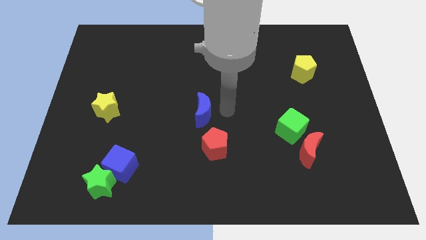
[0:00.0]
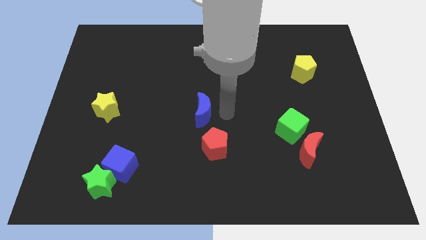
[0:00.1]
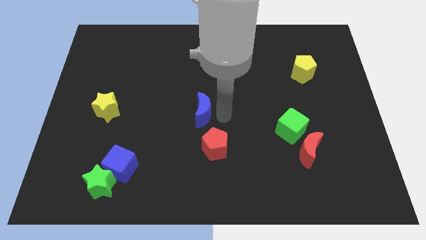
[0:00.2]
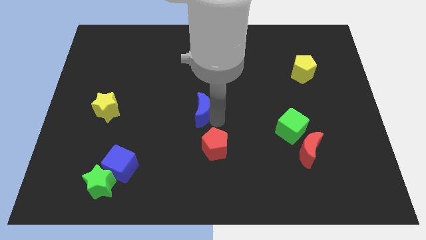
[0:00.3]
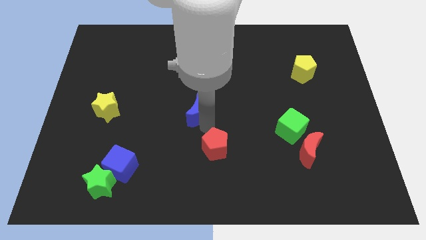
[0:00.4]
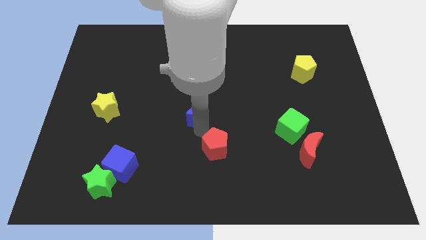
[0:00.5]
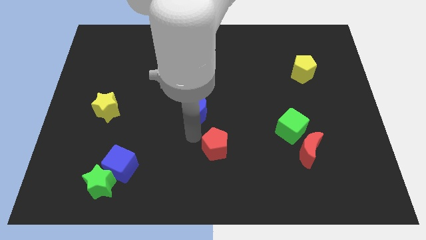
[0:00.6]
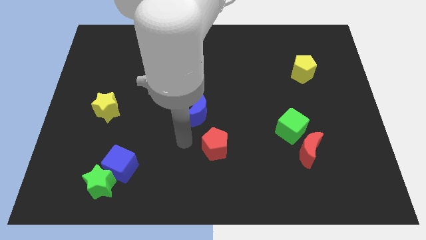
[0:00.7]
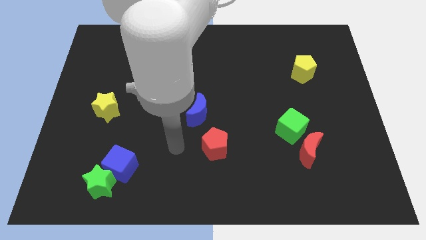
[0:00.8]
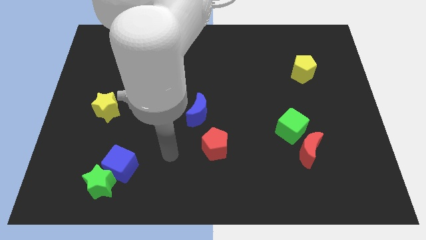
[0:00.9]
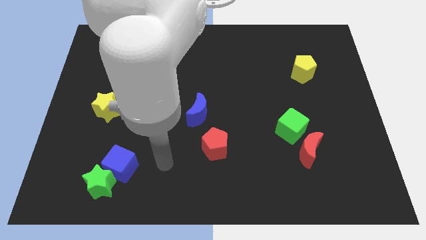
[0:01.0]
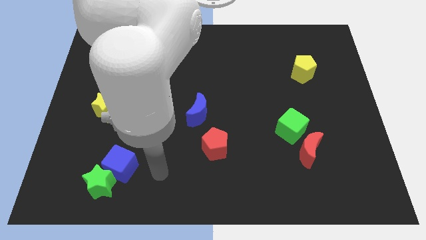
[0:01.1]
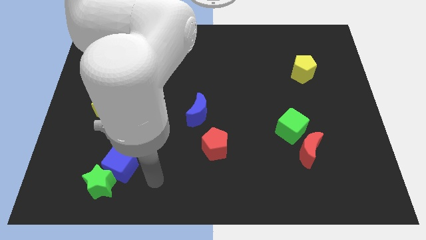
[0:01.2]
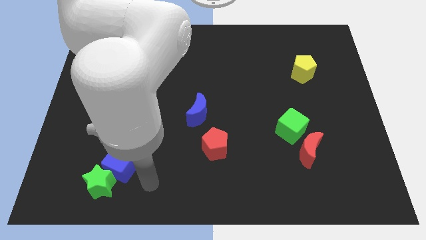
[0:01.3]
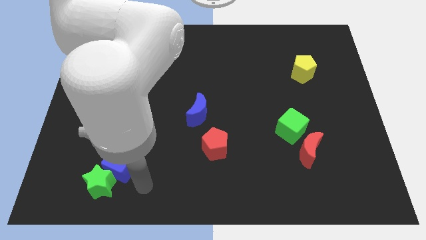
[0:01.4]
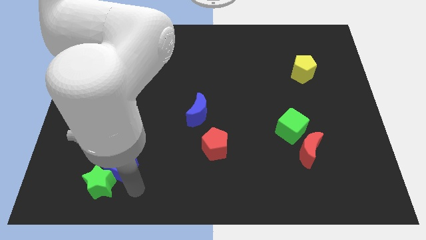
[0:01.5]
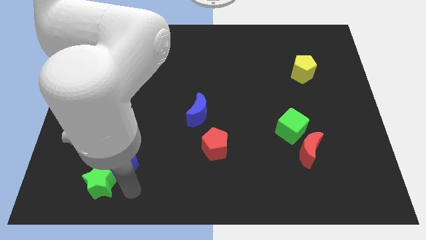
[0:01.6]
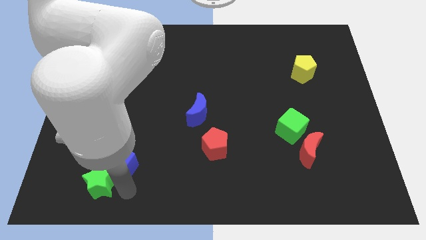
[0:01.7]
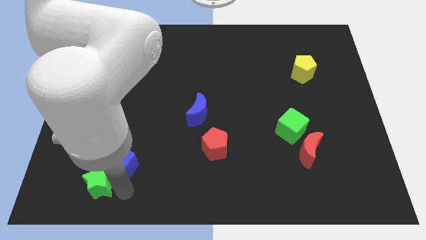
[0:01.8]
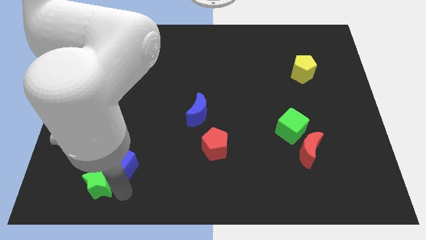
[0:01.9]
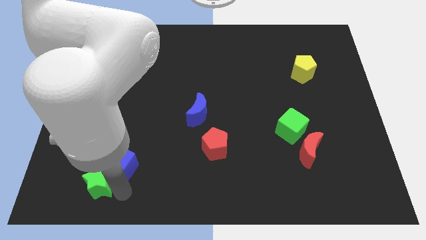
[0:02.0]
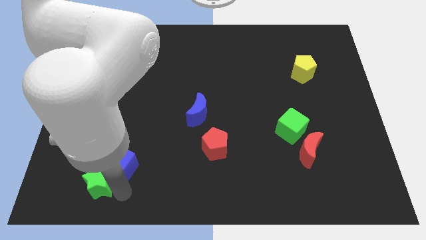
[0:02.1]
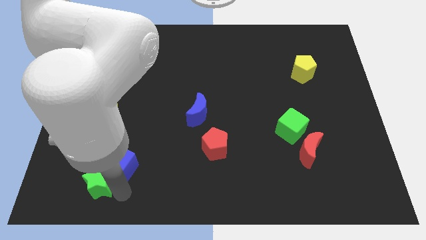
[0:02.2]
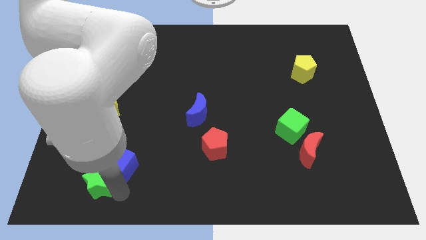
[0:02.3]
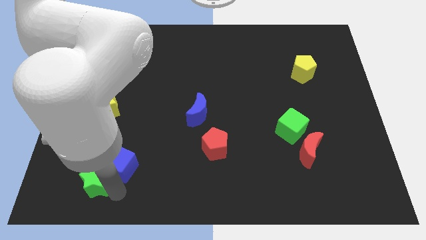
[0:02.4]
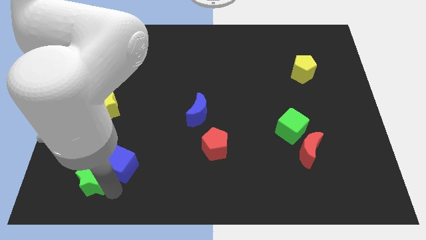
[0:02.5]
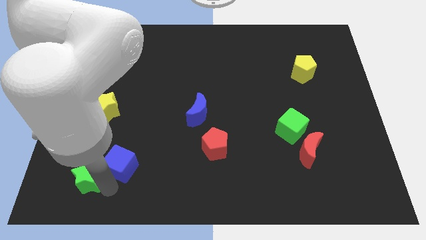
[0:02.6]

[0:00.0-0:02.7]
move the arm to the green star

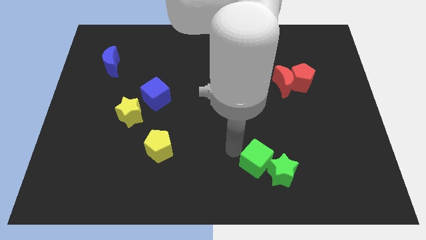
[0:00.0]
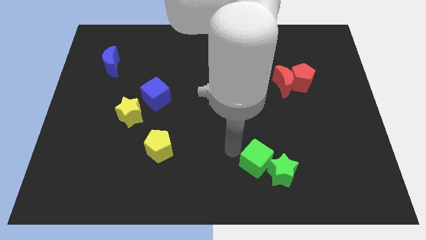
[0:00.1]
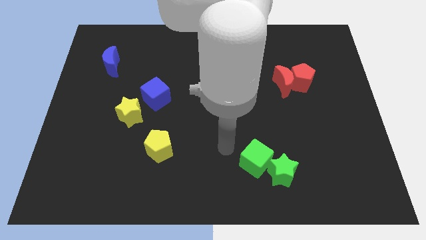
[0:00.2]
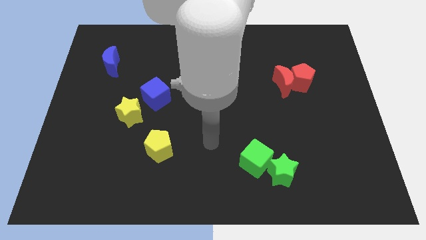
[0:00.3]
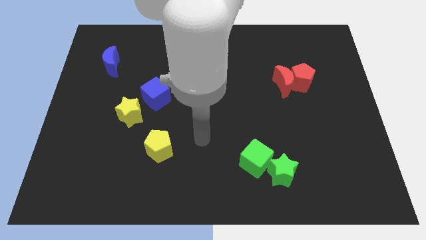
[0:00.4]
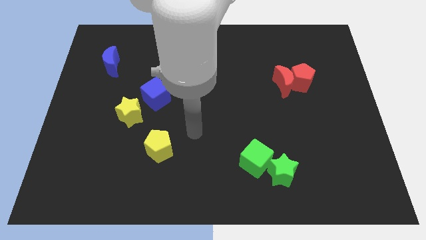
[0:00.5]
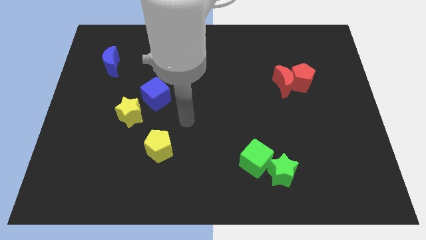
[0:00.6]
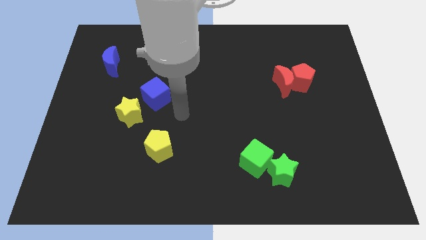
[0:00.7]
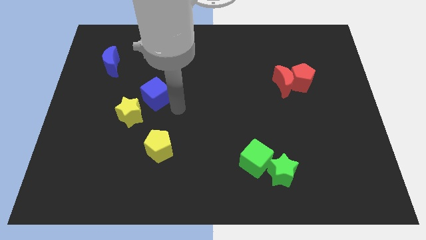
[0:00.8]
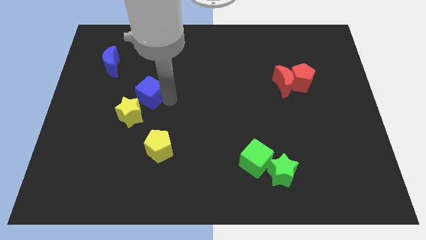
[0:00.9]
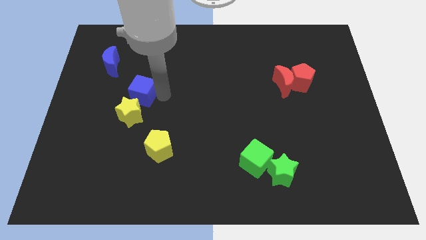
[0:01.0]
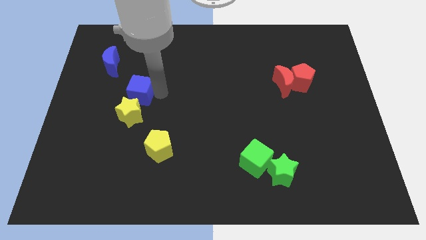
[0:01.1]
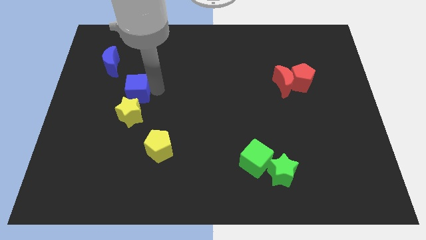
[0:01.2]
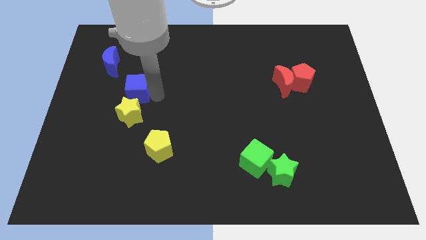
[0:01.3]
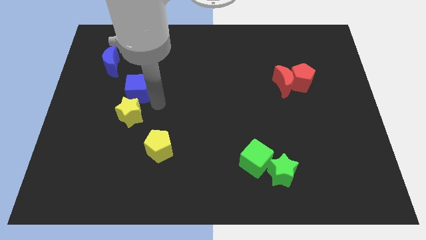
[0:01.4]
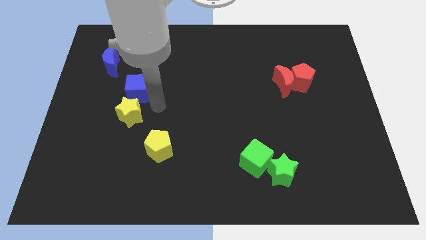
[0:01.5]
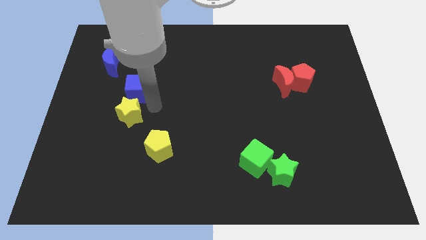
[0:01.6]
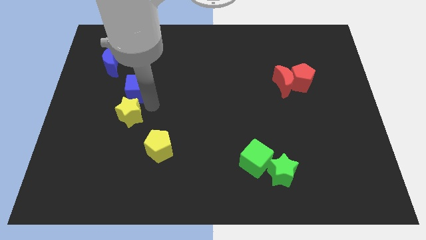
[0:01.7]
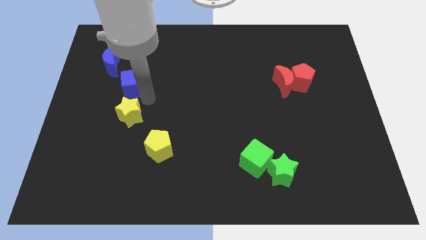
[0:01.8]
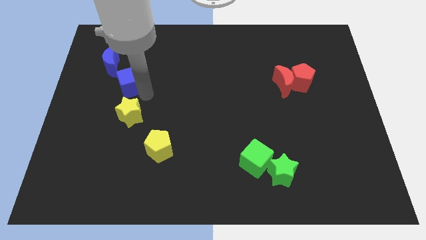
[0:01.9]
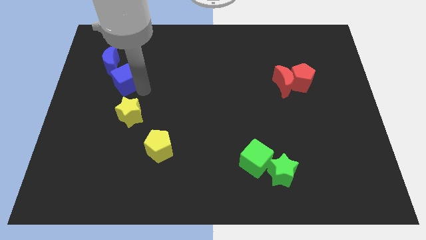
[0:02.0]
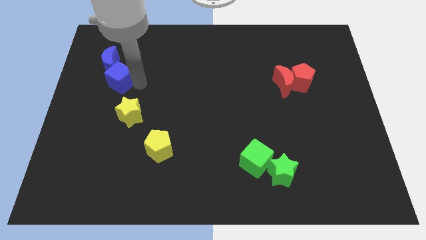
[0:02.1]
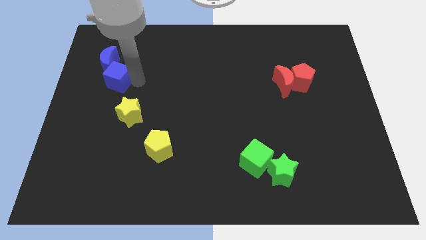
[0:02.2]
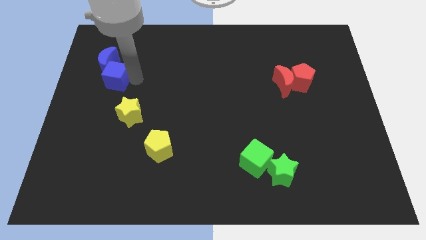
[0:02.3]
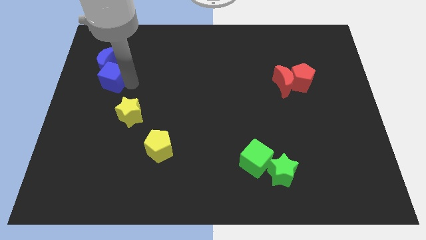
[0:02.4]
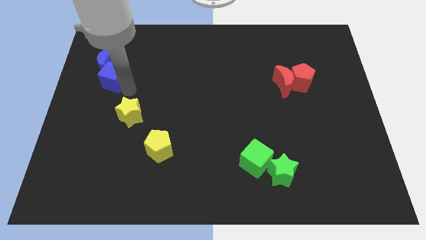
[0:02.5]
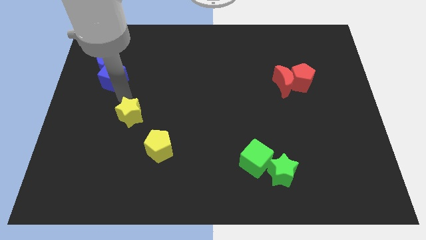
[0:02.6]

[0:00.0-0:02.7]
push the blue cube into the blue crescent

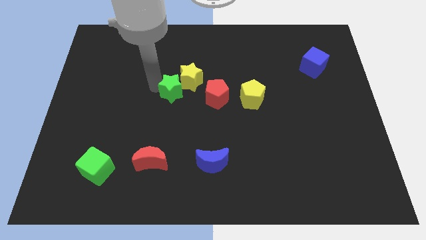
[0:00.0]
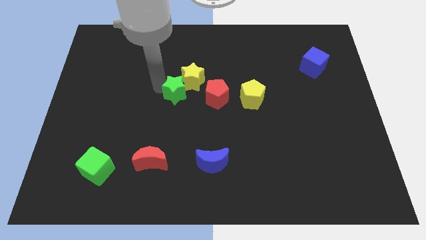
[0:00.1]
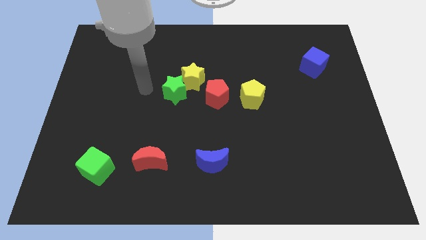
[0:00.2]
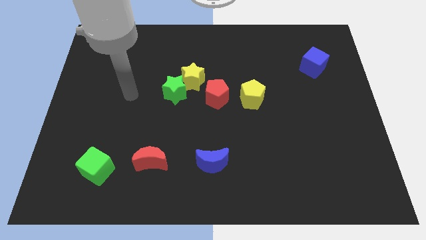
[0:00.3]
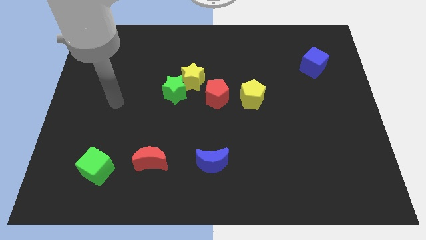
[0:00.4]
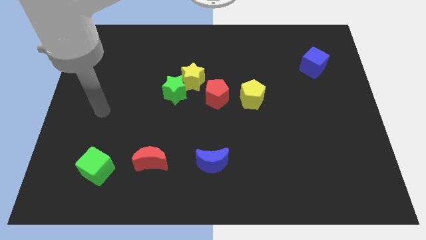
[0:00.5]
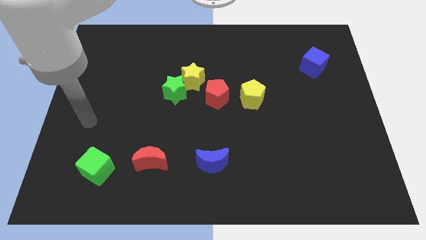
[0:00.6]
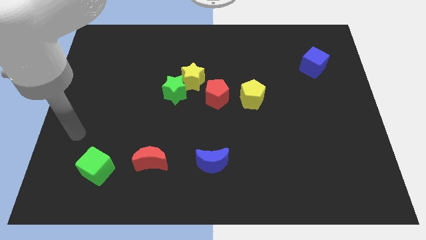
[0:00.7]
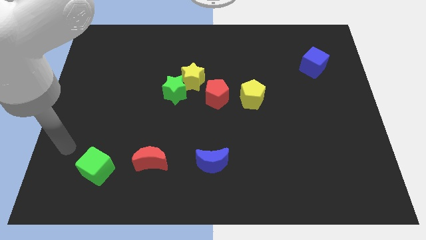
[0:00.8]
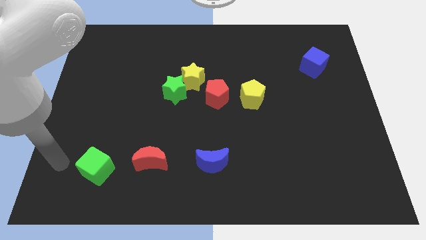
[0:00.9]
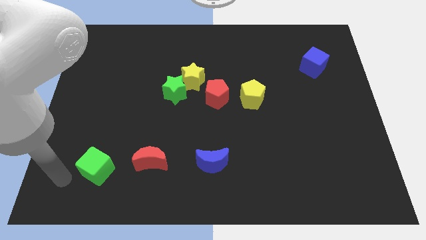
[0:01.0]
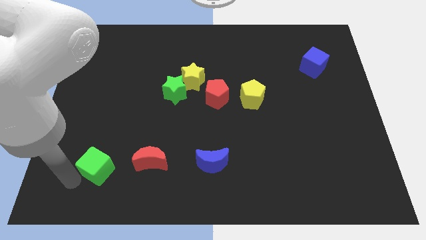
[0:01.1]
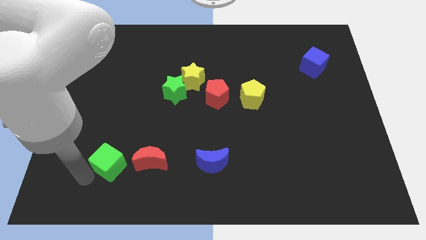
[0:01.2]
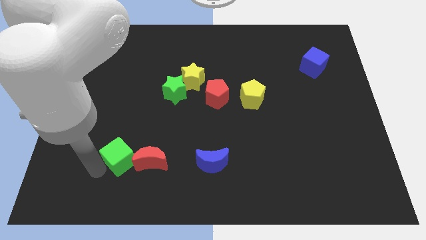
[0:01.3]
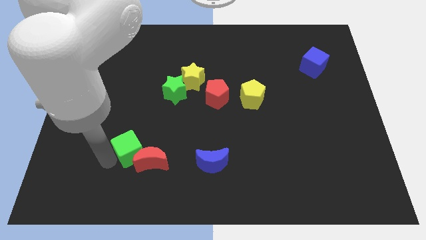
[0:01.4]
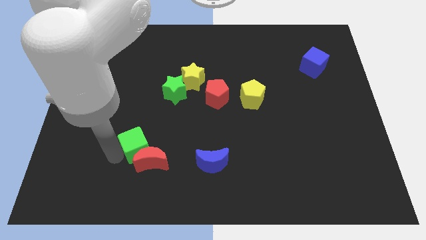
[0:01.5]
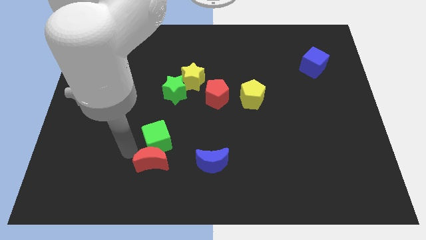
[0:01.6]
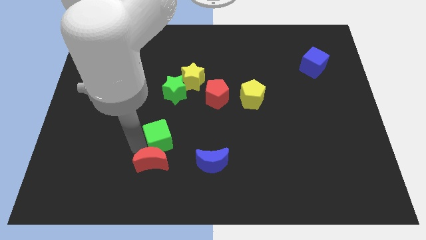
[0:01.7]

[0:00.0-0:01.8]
place the green cube above the red crescent

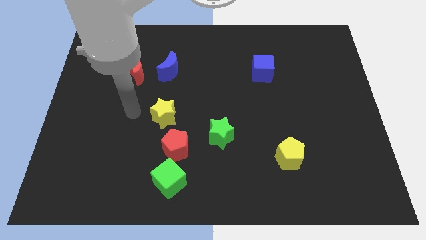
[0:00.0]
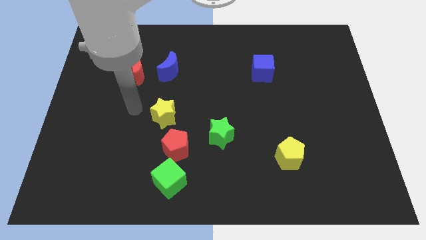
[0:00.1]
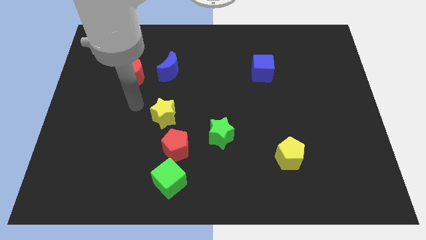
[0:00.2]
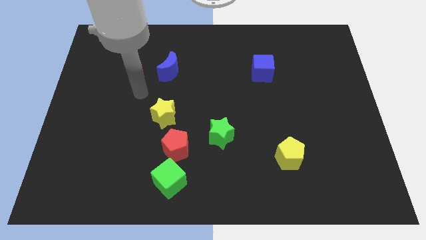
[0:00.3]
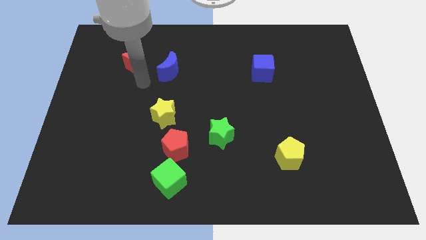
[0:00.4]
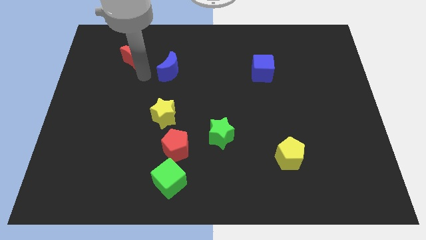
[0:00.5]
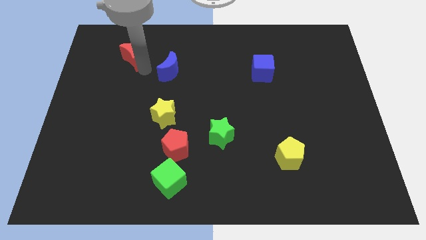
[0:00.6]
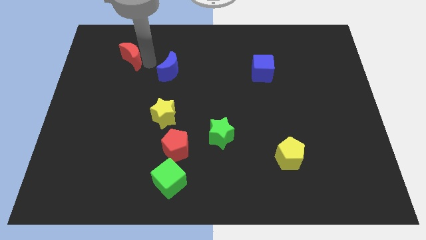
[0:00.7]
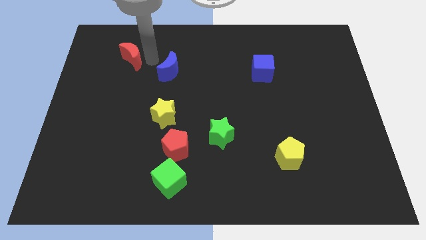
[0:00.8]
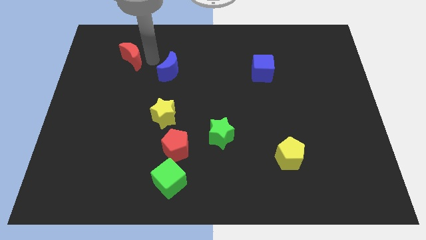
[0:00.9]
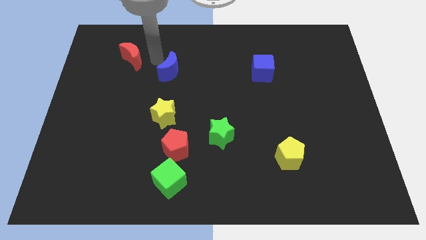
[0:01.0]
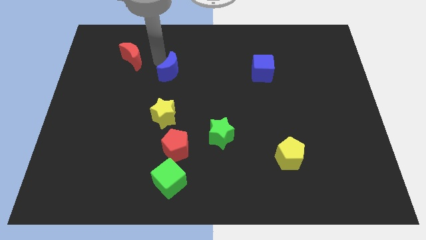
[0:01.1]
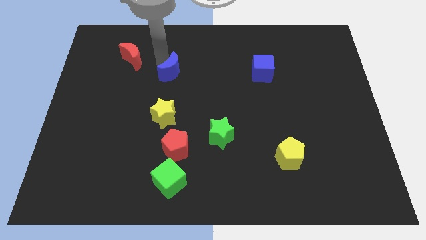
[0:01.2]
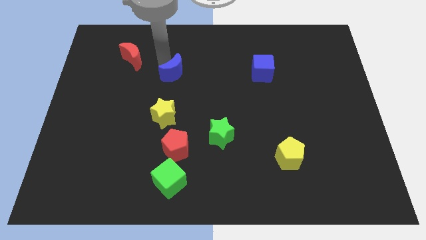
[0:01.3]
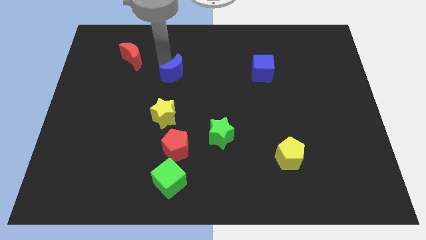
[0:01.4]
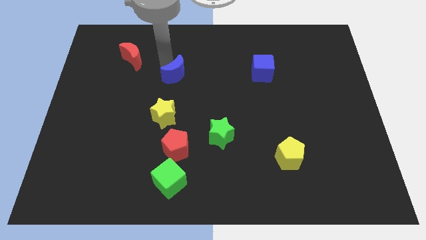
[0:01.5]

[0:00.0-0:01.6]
slide red moon and the blue moon away from each other

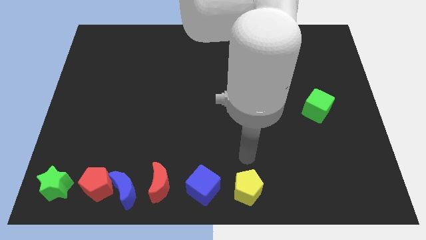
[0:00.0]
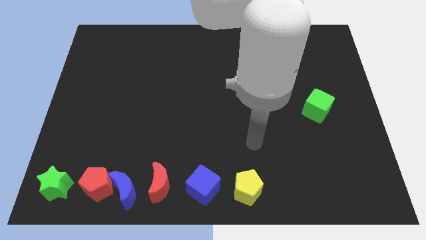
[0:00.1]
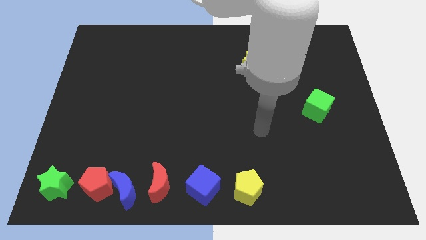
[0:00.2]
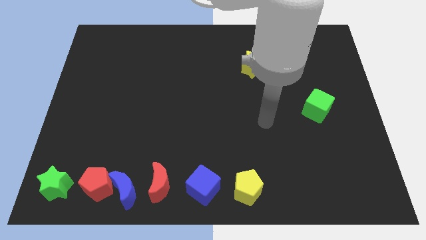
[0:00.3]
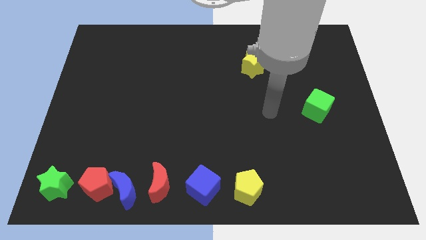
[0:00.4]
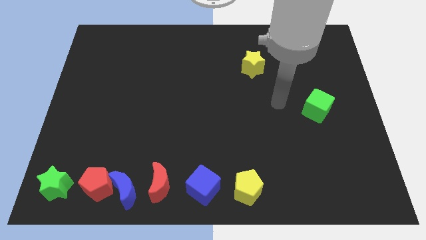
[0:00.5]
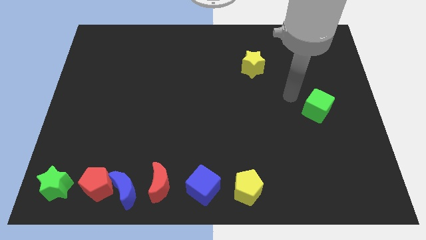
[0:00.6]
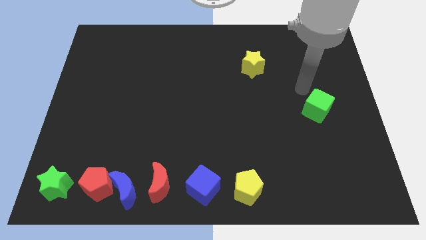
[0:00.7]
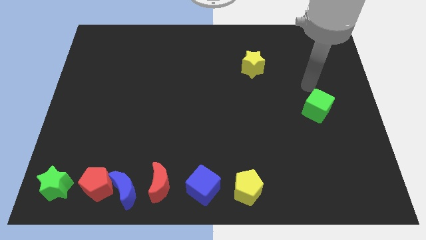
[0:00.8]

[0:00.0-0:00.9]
move the arm away from the yellow pentagon
